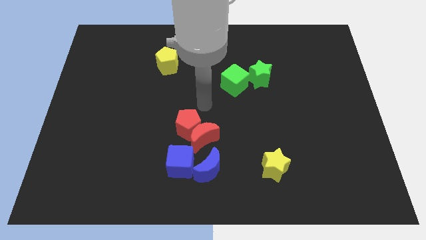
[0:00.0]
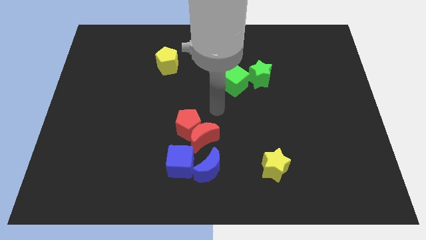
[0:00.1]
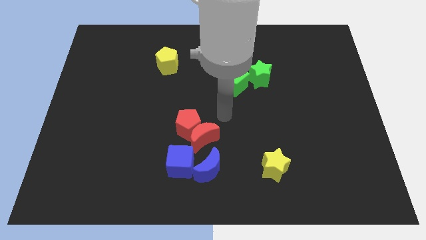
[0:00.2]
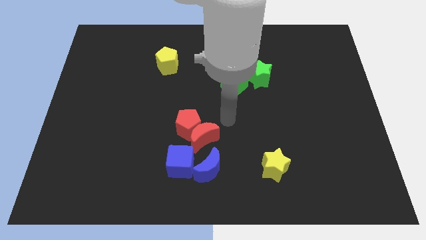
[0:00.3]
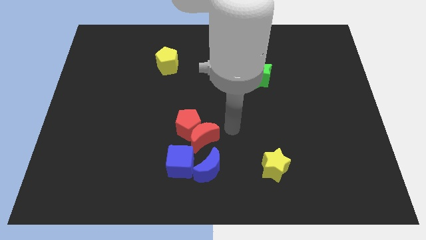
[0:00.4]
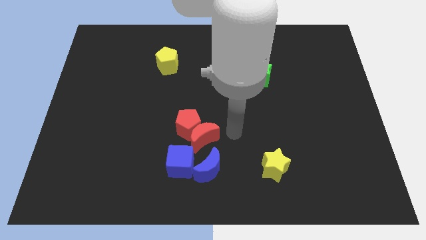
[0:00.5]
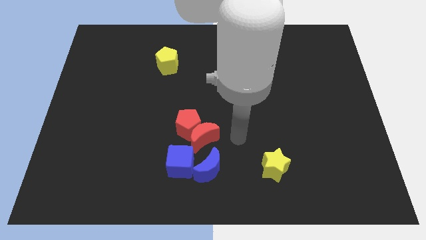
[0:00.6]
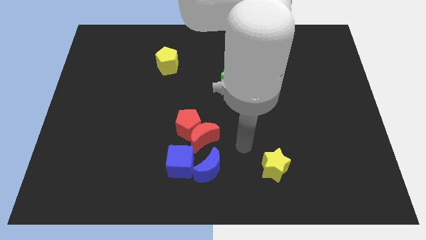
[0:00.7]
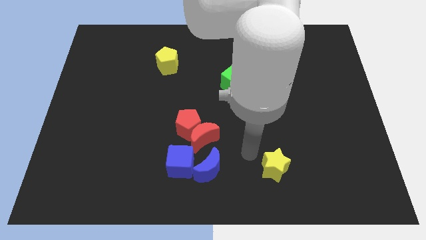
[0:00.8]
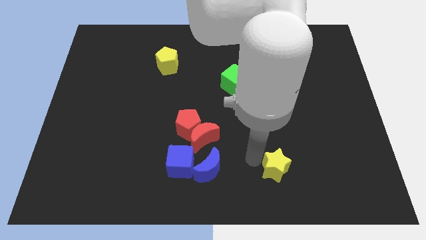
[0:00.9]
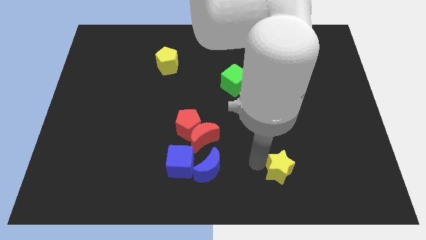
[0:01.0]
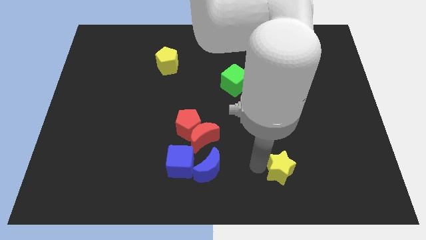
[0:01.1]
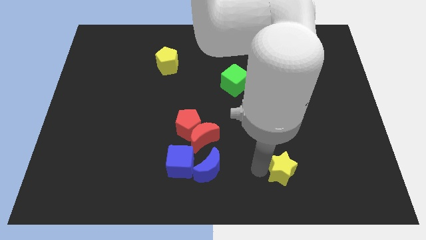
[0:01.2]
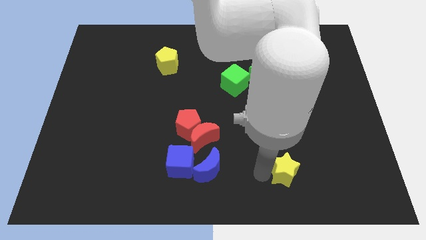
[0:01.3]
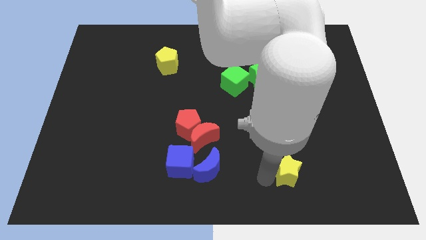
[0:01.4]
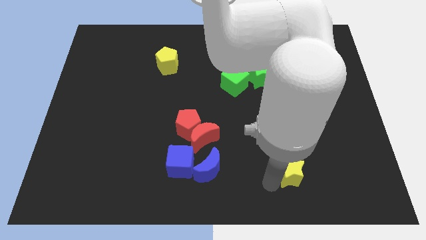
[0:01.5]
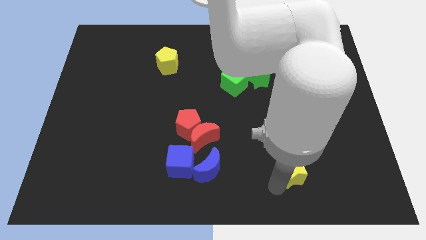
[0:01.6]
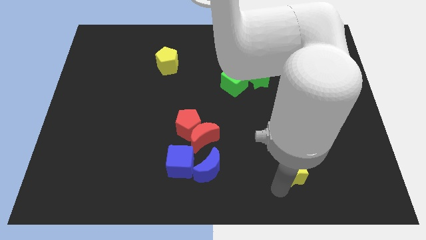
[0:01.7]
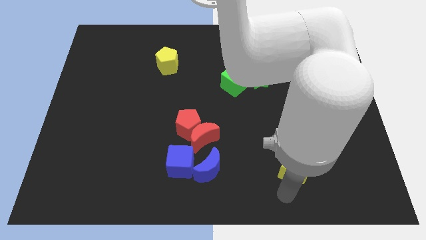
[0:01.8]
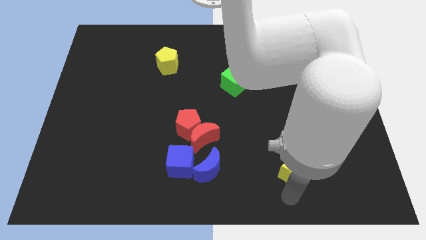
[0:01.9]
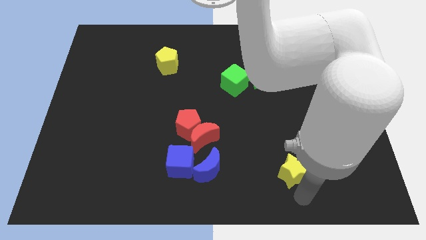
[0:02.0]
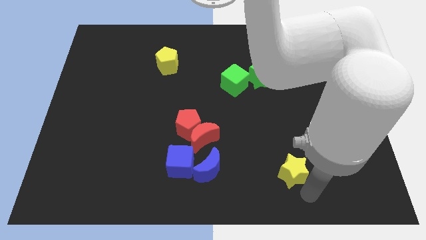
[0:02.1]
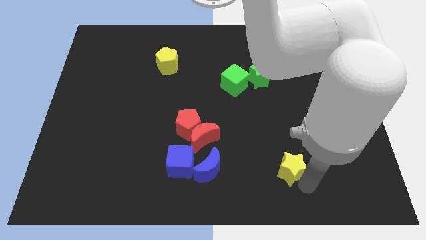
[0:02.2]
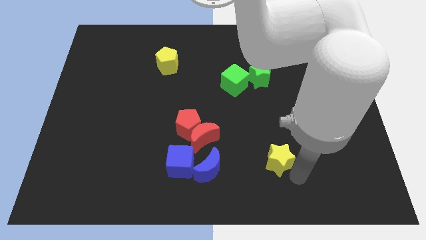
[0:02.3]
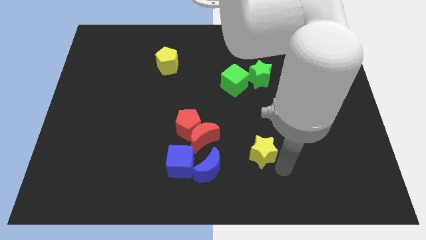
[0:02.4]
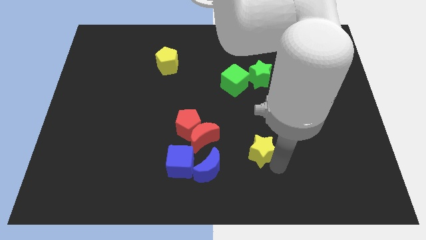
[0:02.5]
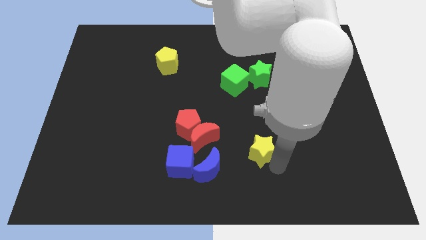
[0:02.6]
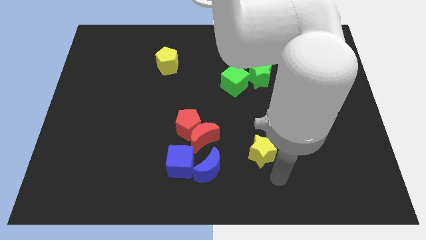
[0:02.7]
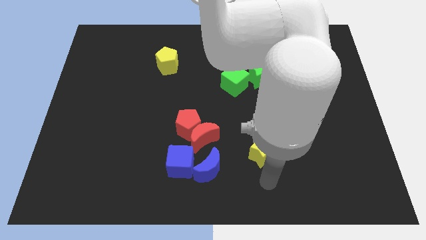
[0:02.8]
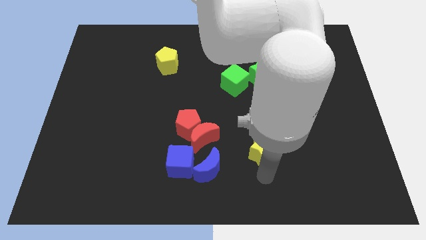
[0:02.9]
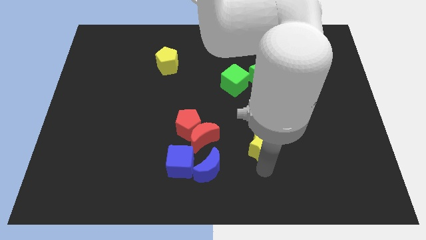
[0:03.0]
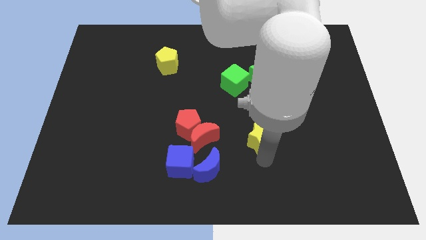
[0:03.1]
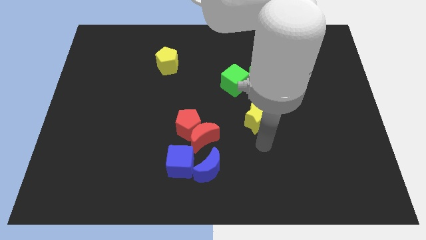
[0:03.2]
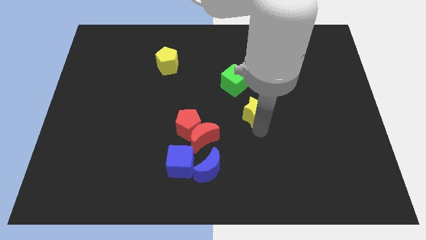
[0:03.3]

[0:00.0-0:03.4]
push the yellow star upward

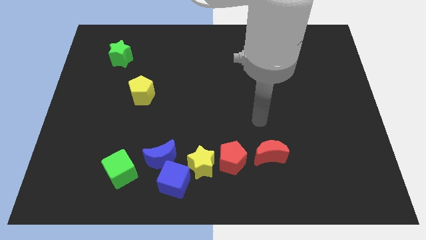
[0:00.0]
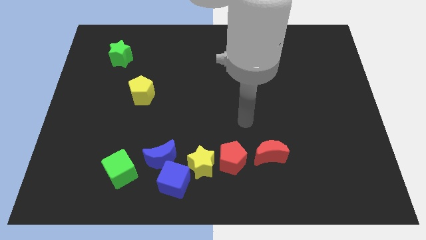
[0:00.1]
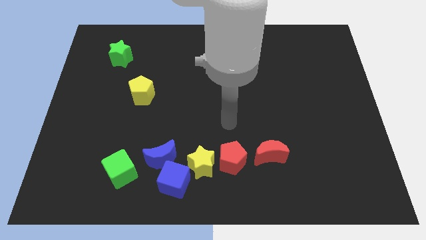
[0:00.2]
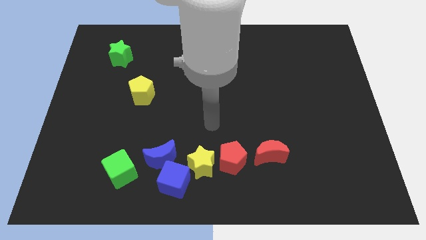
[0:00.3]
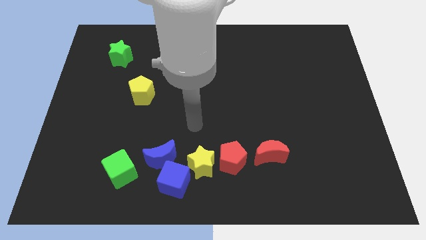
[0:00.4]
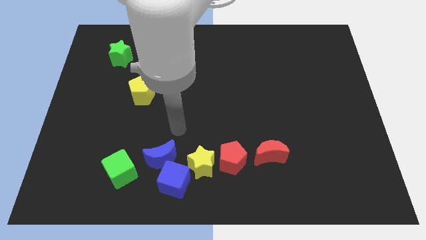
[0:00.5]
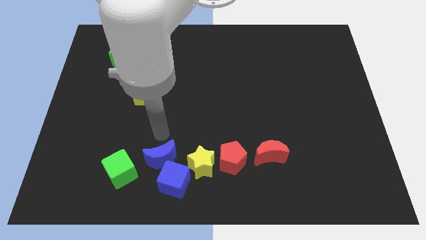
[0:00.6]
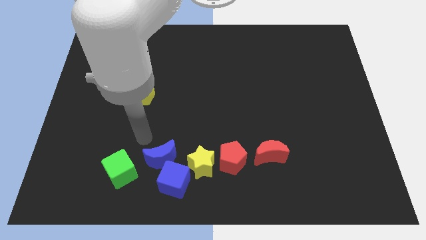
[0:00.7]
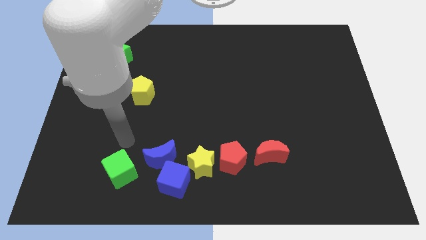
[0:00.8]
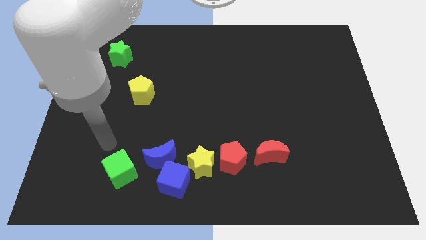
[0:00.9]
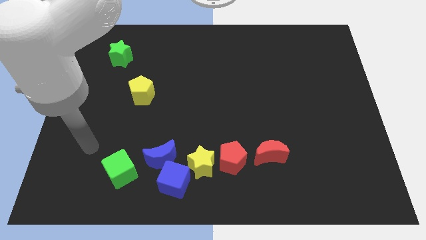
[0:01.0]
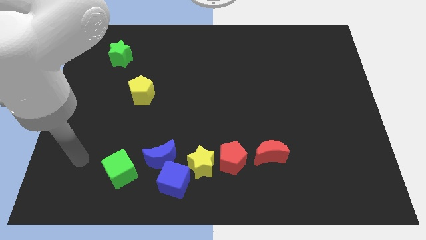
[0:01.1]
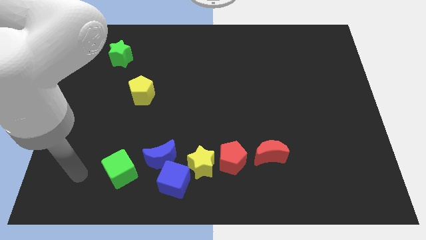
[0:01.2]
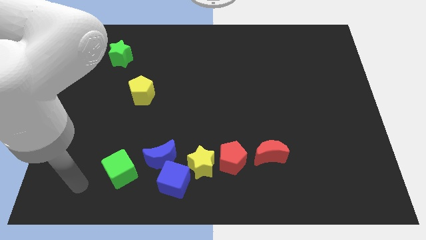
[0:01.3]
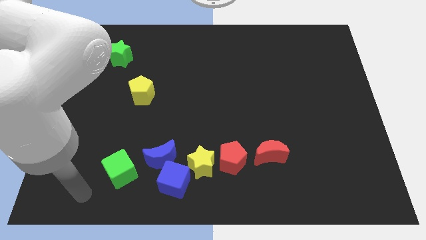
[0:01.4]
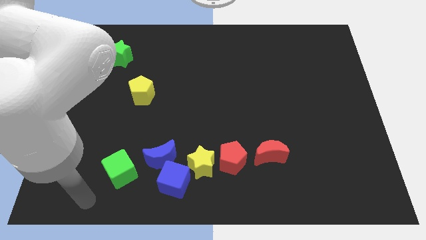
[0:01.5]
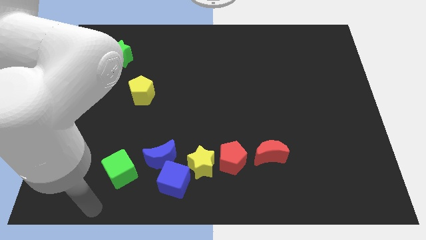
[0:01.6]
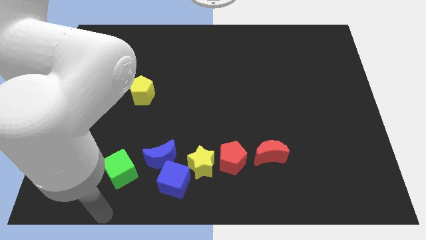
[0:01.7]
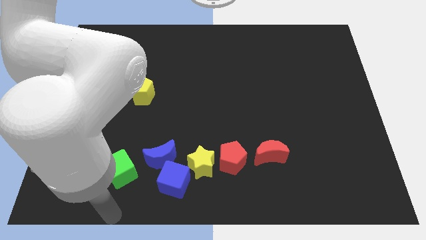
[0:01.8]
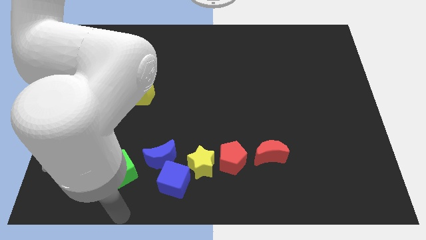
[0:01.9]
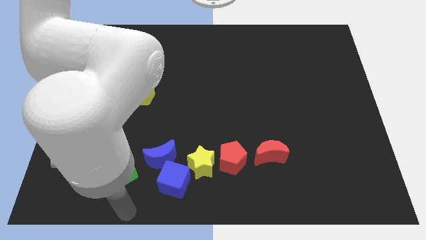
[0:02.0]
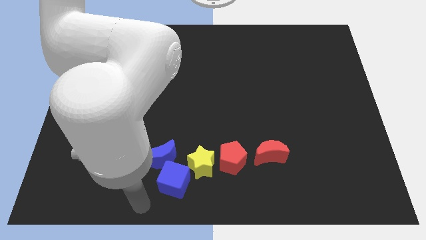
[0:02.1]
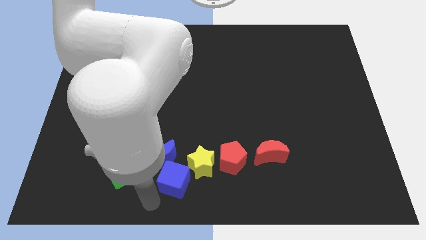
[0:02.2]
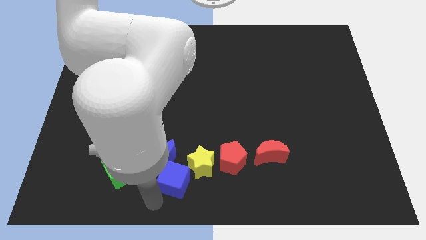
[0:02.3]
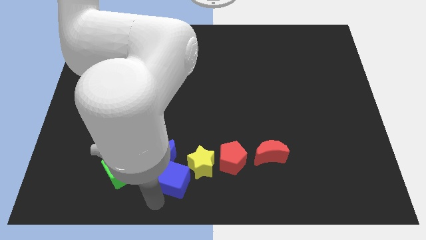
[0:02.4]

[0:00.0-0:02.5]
move your arm and point below the blue cube

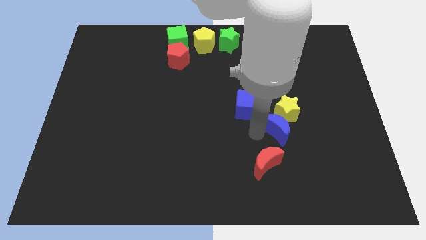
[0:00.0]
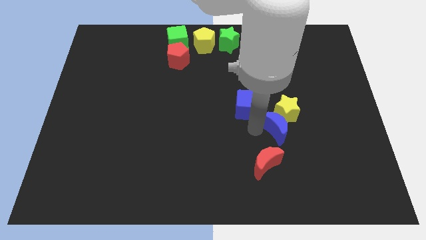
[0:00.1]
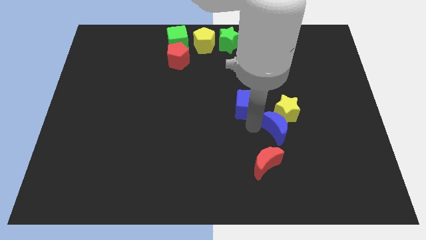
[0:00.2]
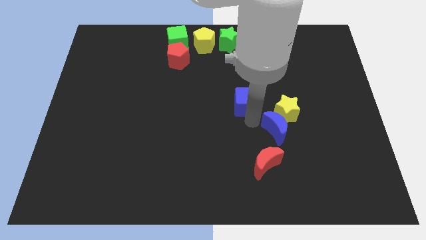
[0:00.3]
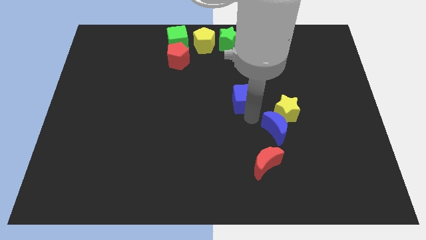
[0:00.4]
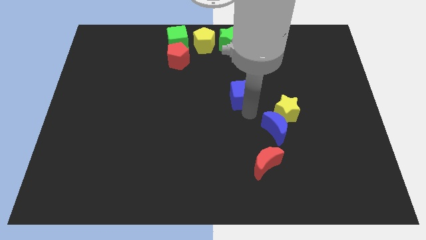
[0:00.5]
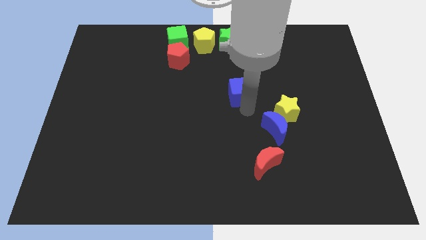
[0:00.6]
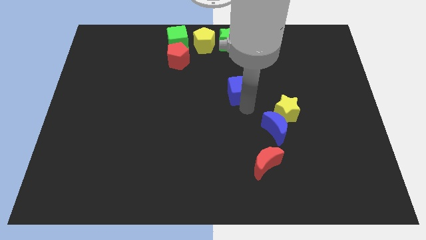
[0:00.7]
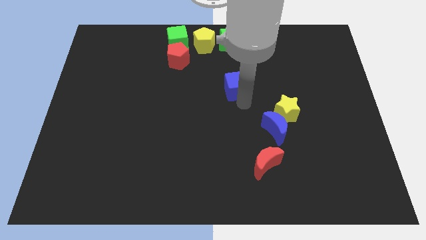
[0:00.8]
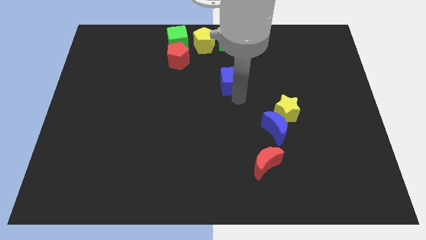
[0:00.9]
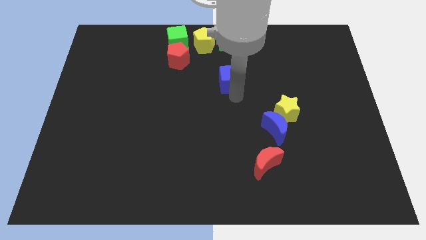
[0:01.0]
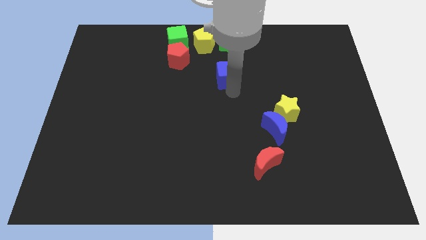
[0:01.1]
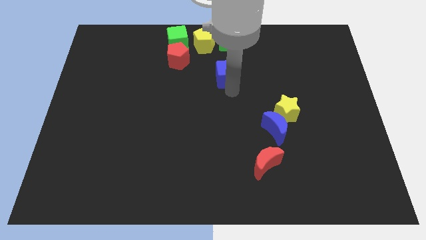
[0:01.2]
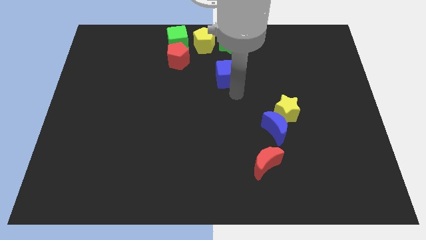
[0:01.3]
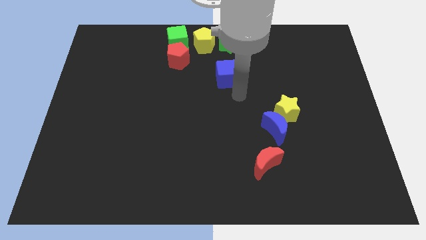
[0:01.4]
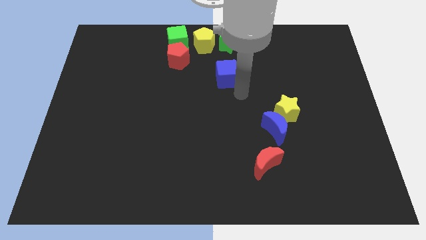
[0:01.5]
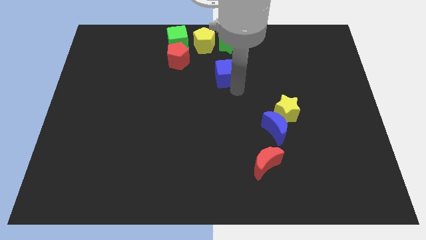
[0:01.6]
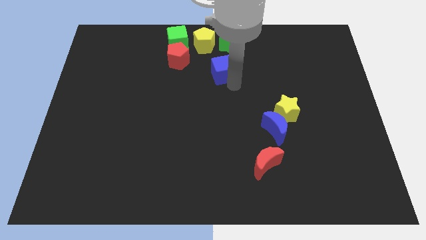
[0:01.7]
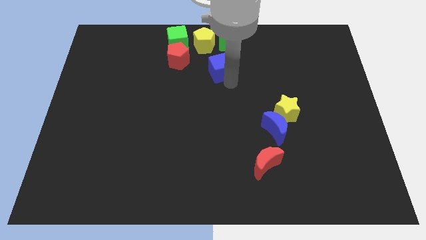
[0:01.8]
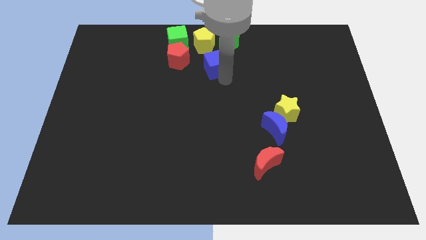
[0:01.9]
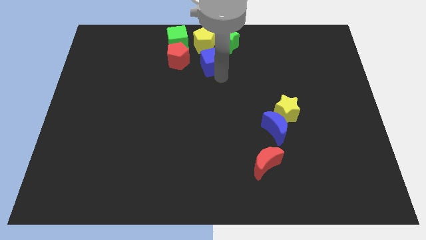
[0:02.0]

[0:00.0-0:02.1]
separate blue cube from blue moon

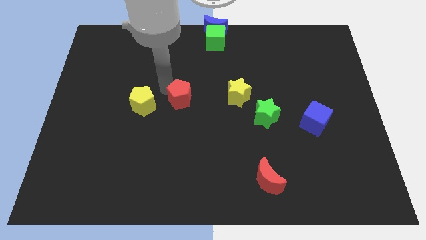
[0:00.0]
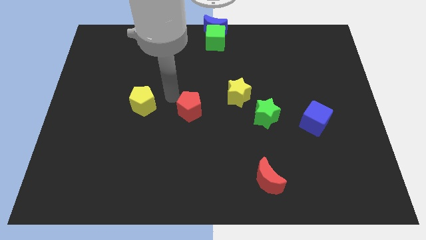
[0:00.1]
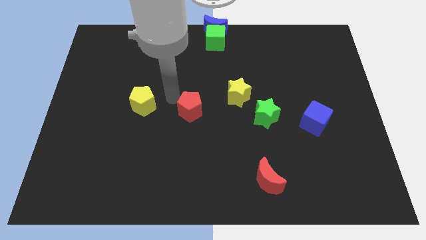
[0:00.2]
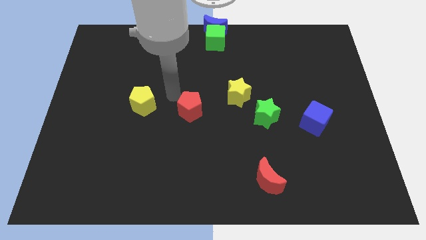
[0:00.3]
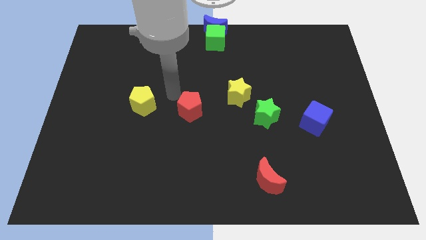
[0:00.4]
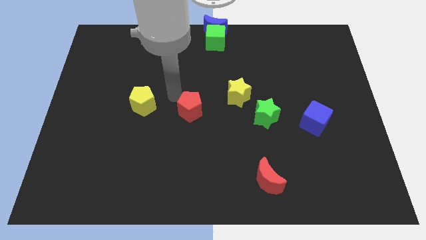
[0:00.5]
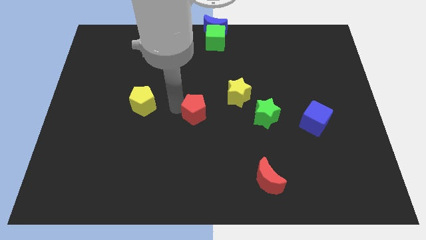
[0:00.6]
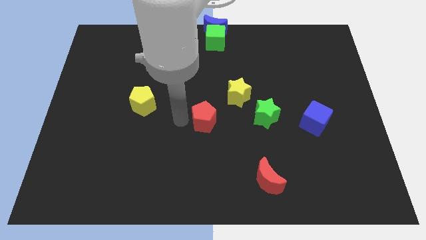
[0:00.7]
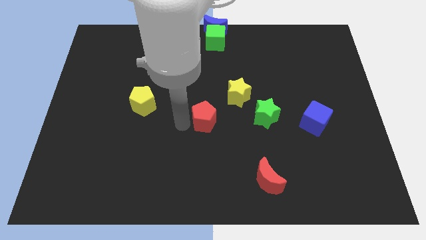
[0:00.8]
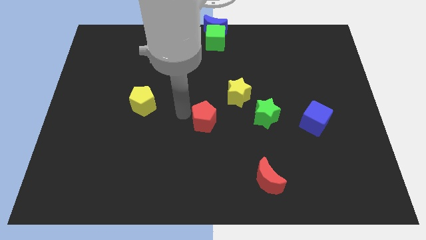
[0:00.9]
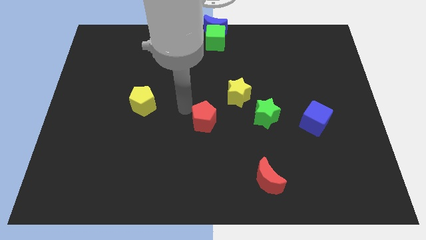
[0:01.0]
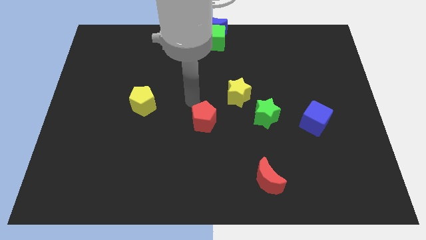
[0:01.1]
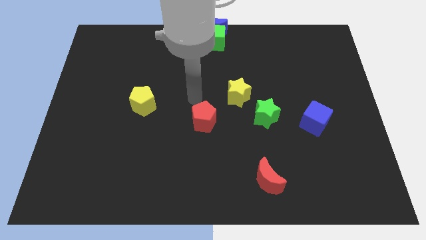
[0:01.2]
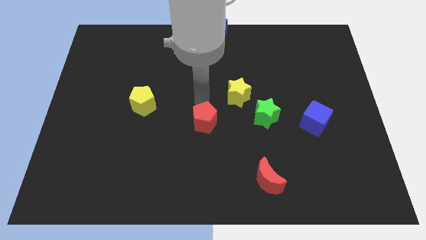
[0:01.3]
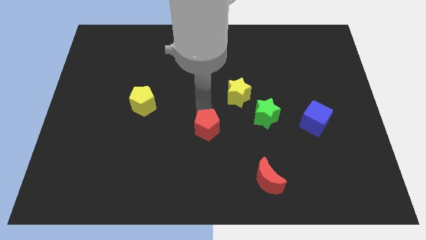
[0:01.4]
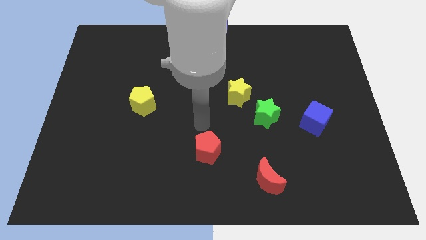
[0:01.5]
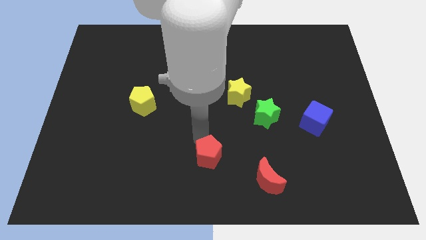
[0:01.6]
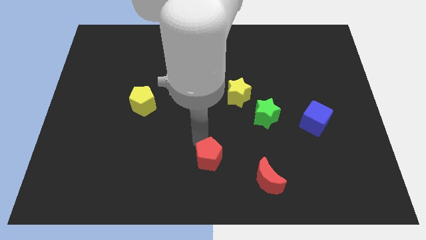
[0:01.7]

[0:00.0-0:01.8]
drag the red pentagon towards the bottom center
